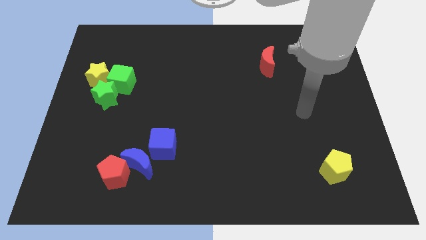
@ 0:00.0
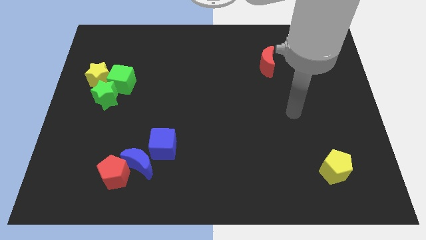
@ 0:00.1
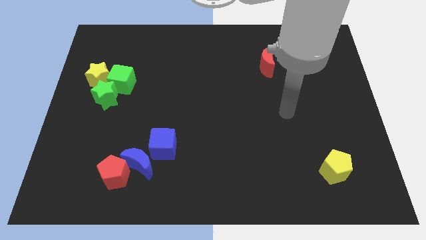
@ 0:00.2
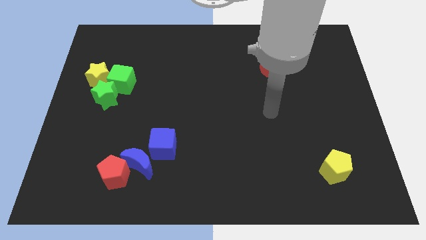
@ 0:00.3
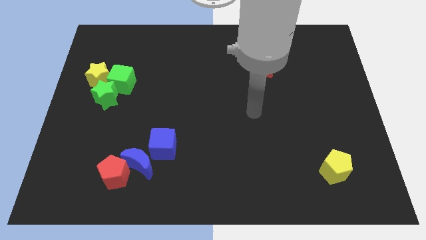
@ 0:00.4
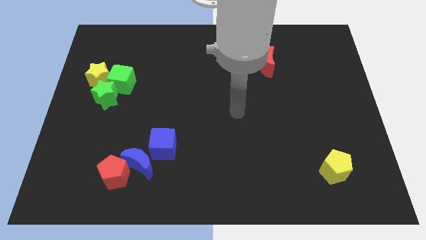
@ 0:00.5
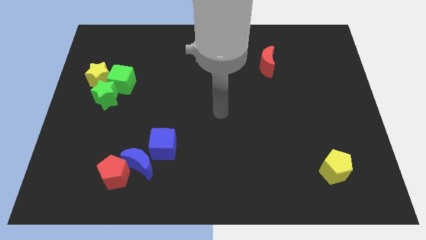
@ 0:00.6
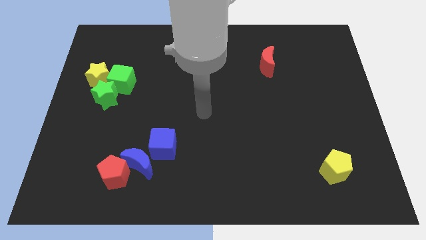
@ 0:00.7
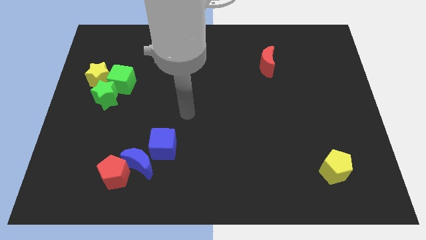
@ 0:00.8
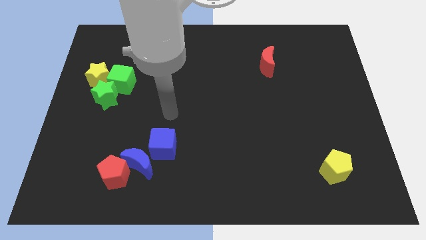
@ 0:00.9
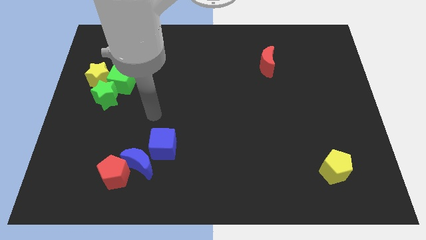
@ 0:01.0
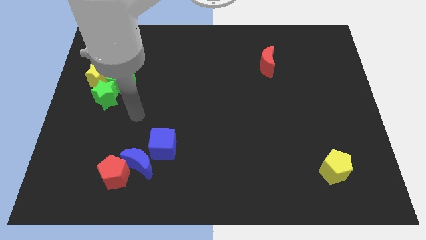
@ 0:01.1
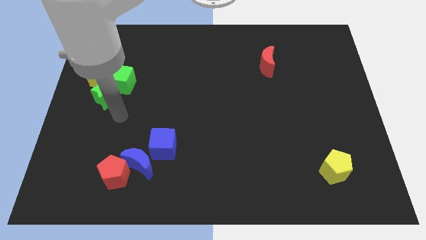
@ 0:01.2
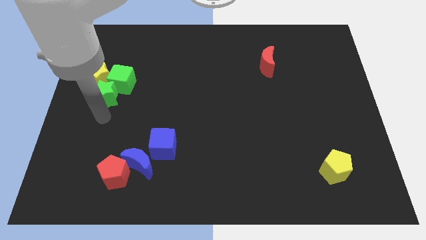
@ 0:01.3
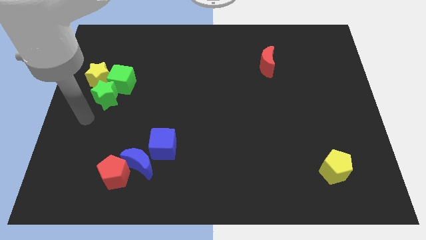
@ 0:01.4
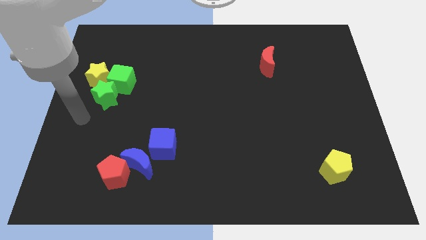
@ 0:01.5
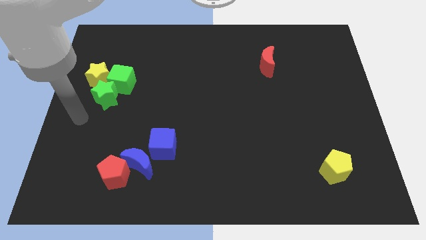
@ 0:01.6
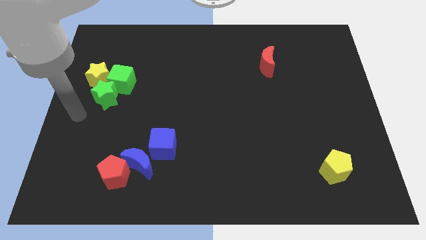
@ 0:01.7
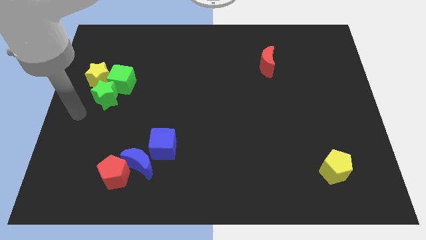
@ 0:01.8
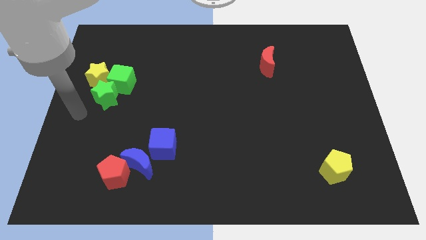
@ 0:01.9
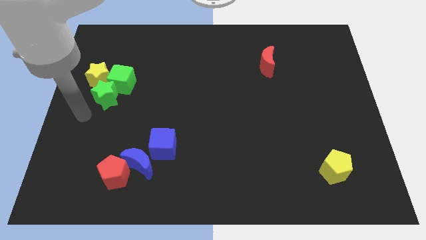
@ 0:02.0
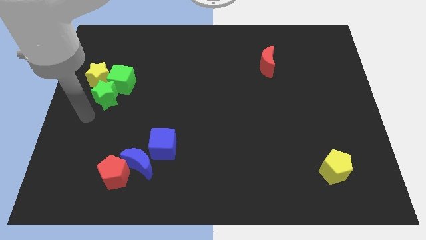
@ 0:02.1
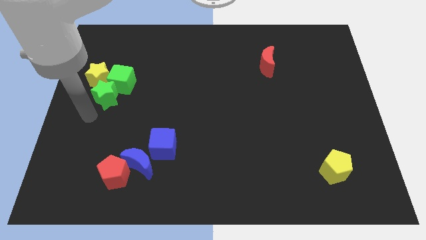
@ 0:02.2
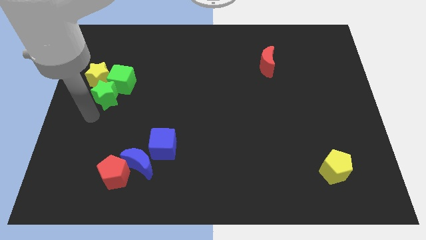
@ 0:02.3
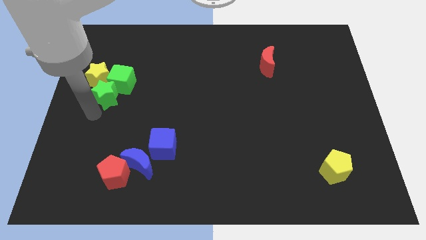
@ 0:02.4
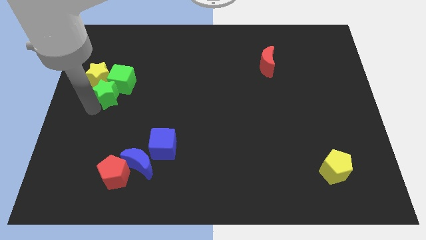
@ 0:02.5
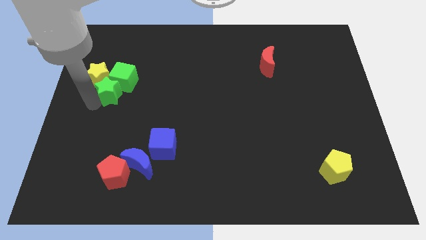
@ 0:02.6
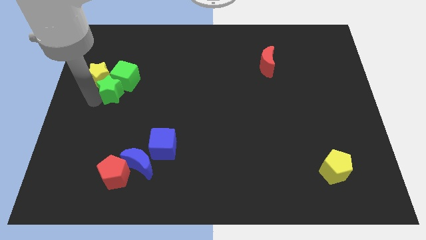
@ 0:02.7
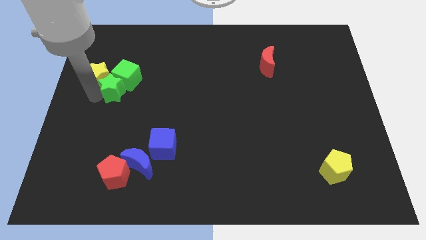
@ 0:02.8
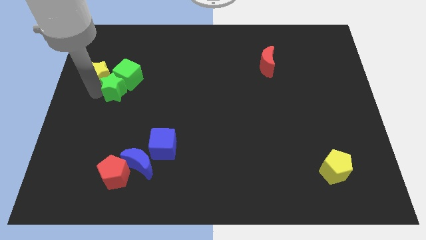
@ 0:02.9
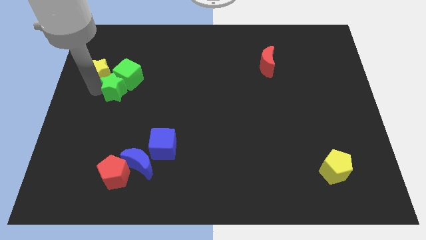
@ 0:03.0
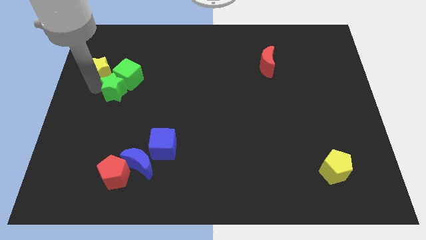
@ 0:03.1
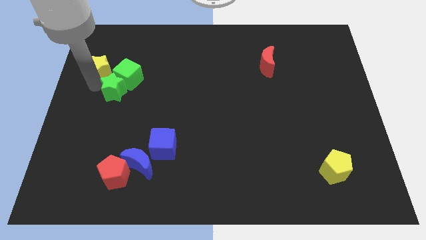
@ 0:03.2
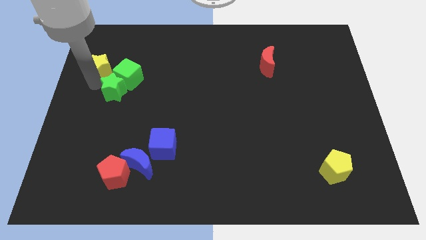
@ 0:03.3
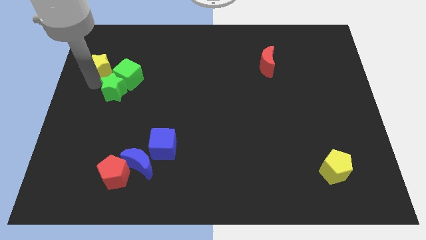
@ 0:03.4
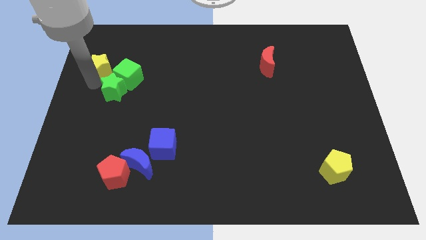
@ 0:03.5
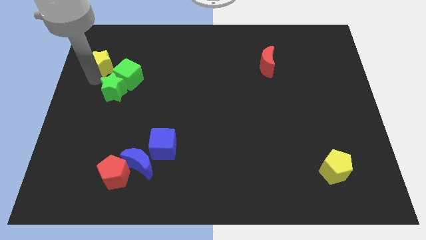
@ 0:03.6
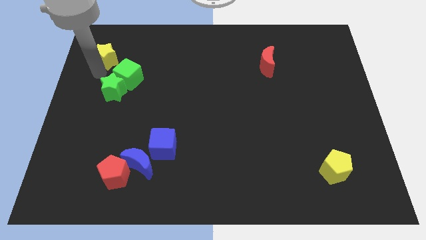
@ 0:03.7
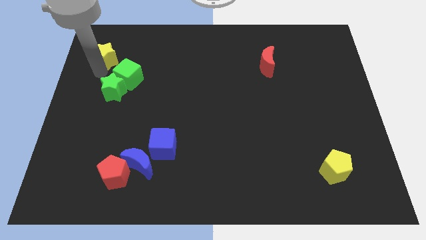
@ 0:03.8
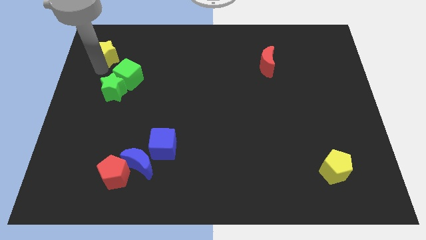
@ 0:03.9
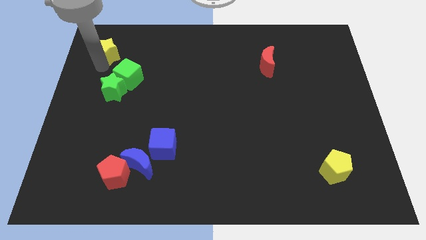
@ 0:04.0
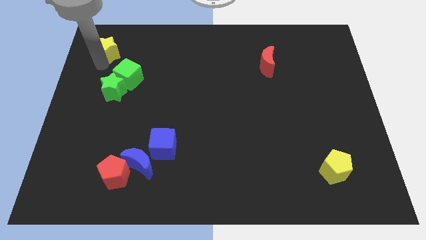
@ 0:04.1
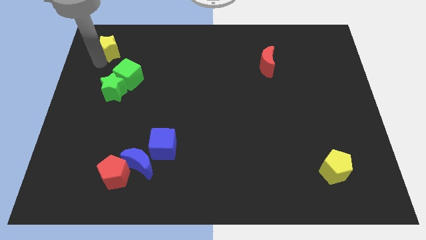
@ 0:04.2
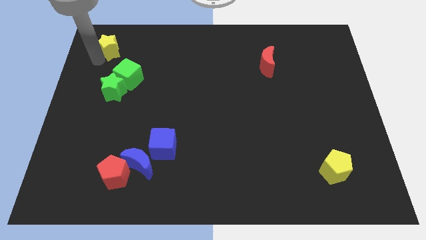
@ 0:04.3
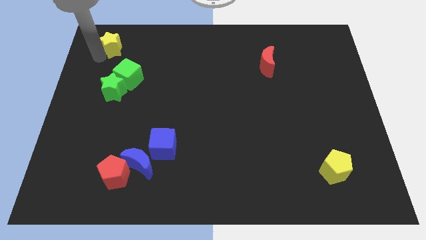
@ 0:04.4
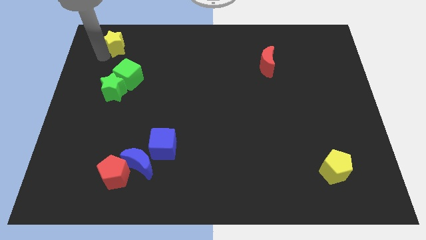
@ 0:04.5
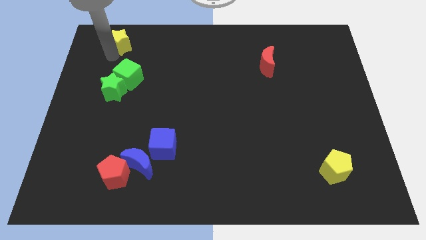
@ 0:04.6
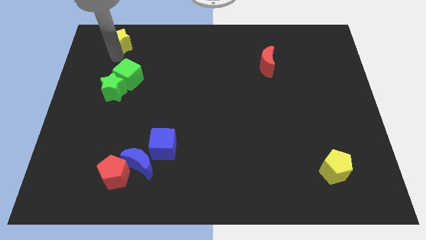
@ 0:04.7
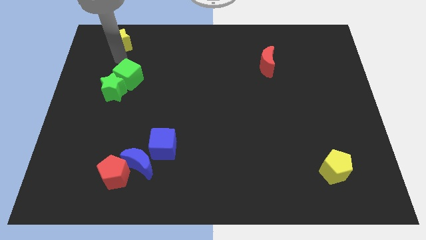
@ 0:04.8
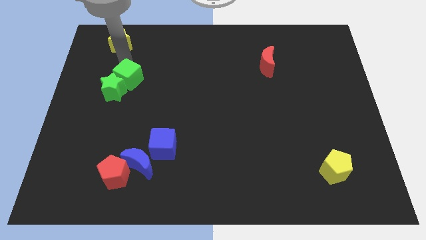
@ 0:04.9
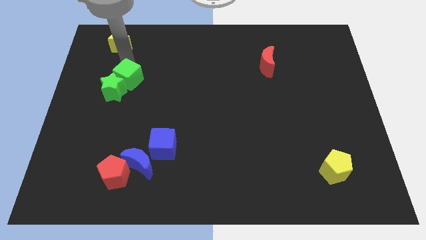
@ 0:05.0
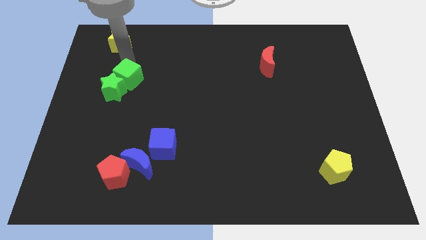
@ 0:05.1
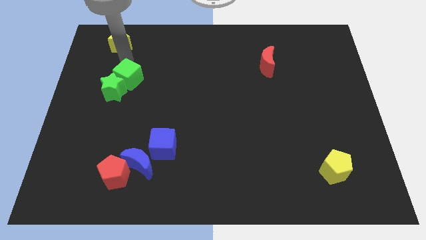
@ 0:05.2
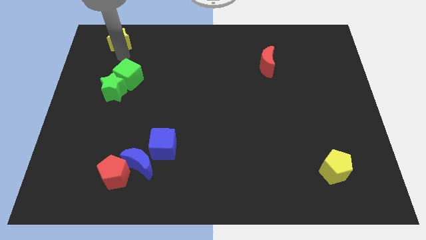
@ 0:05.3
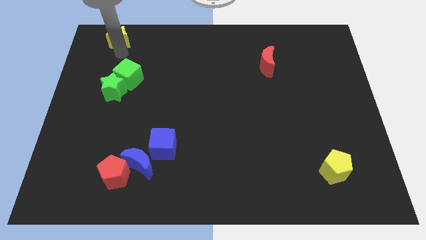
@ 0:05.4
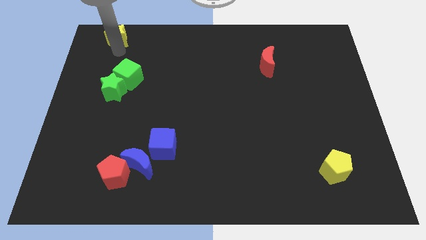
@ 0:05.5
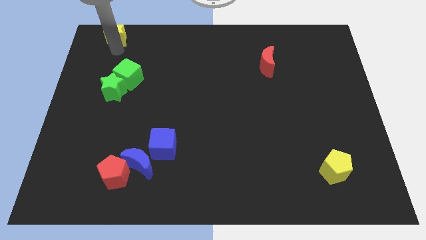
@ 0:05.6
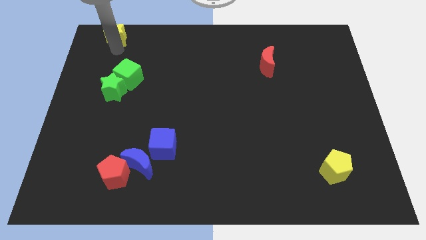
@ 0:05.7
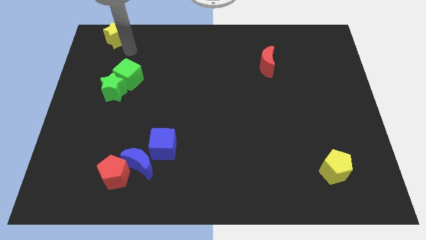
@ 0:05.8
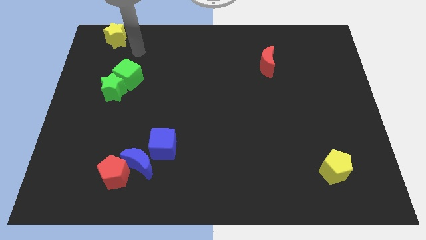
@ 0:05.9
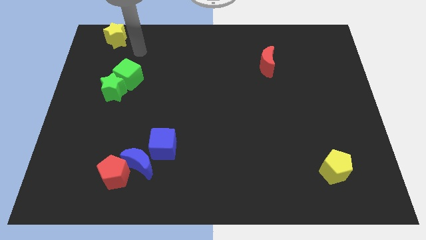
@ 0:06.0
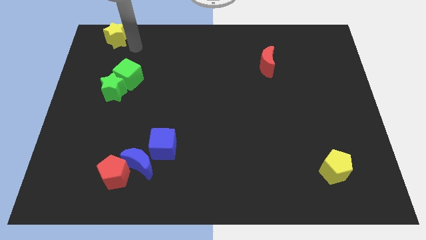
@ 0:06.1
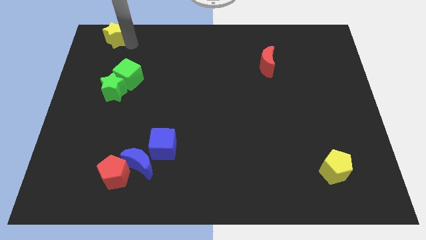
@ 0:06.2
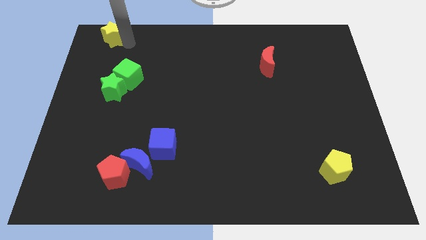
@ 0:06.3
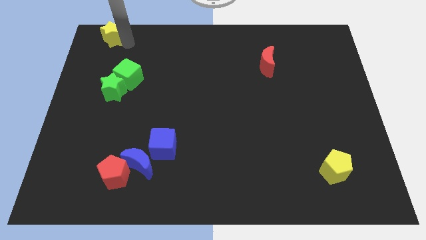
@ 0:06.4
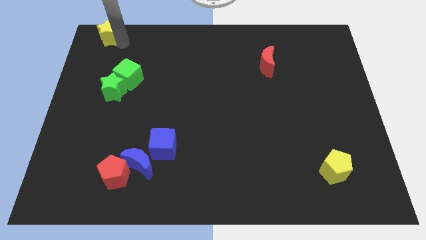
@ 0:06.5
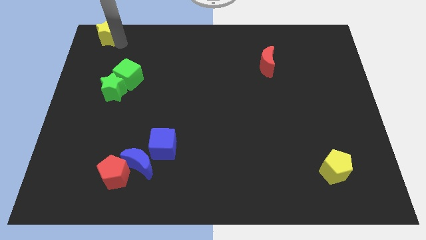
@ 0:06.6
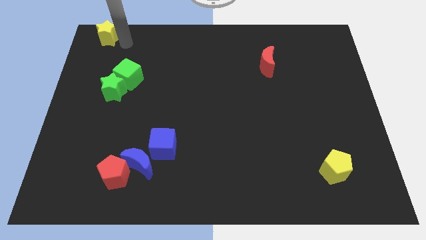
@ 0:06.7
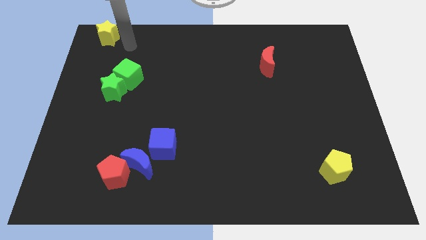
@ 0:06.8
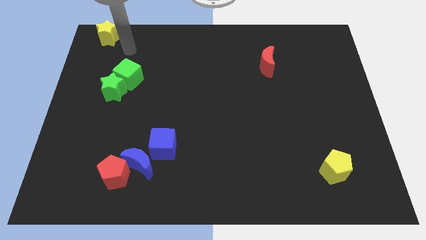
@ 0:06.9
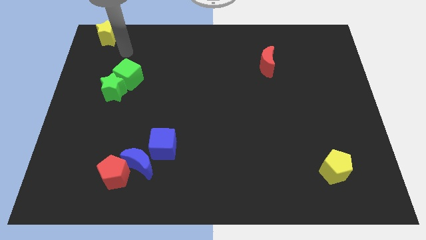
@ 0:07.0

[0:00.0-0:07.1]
push the yellow star to the top of green cube

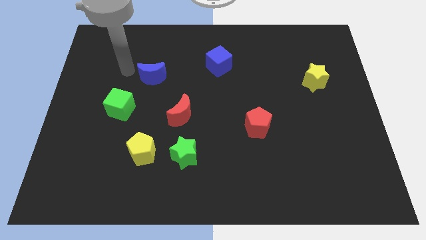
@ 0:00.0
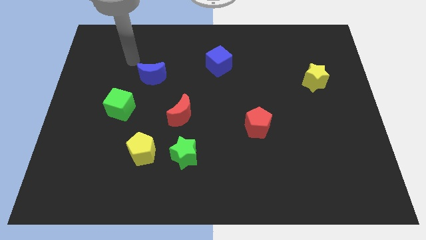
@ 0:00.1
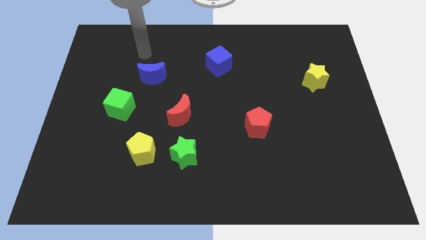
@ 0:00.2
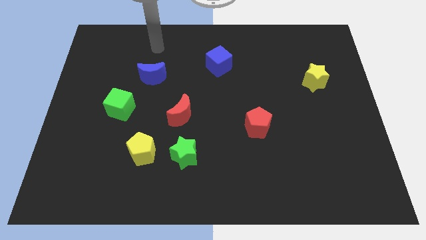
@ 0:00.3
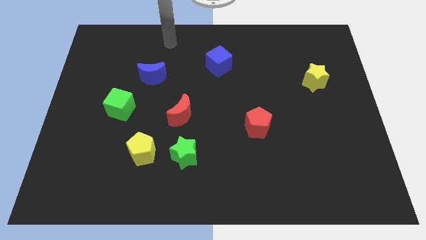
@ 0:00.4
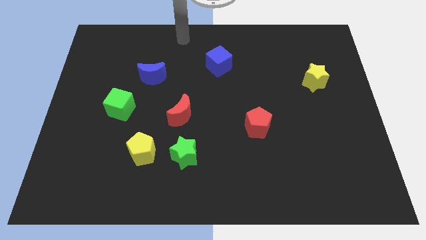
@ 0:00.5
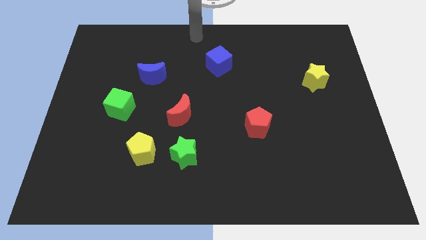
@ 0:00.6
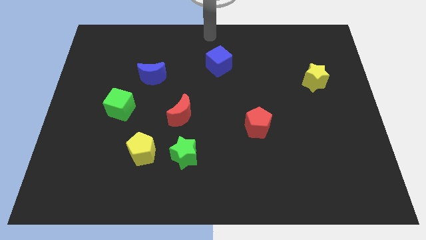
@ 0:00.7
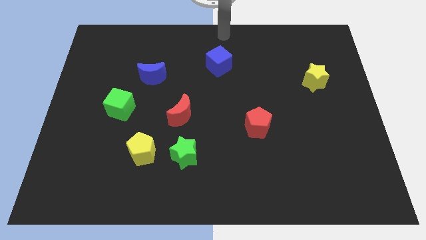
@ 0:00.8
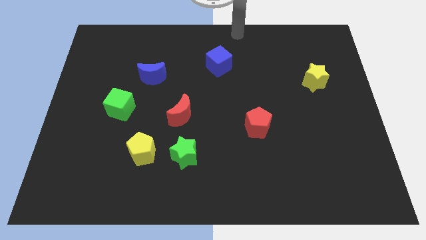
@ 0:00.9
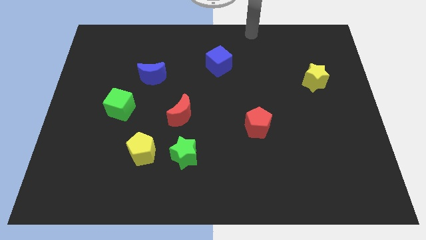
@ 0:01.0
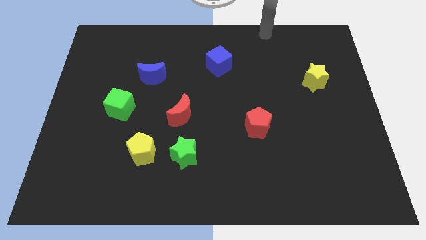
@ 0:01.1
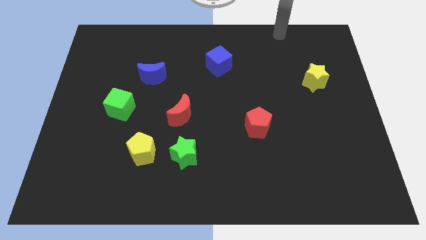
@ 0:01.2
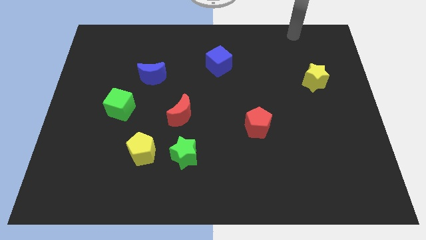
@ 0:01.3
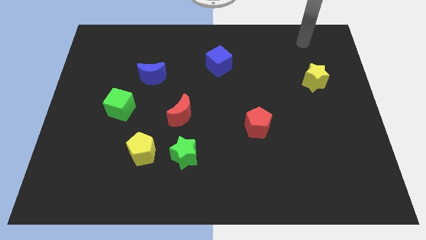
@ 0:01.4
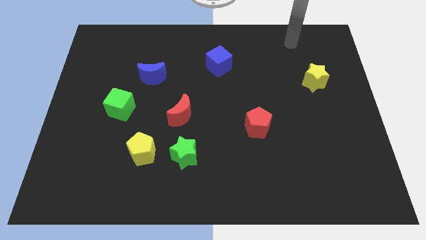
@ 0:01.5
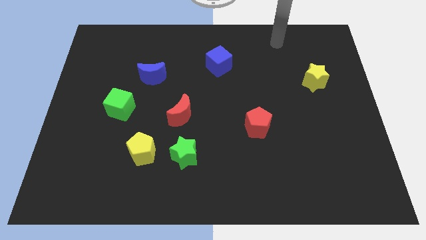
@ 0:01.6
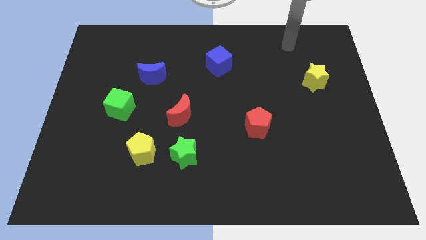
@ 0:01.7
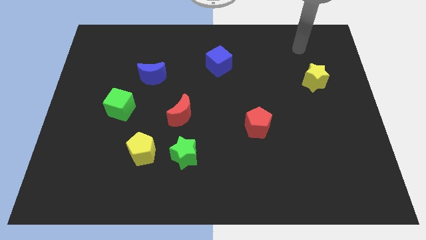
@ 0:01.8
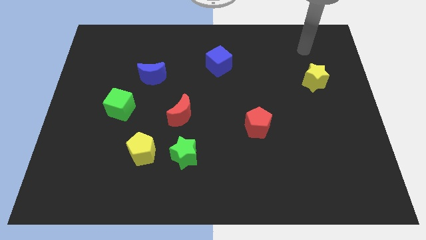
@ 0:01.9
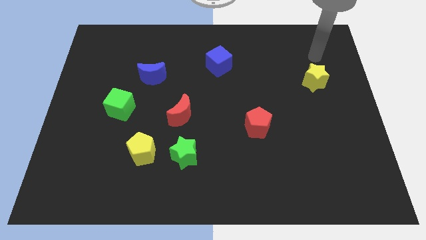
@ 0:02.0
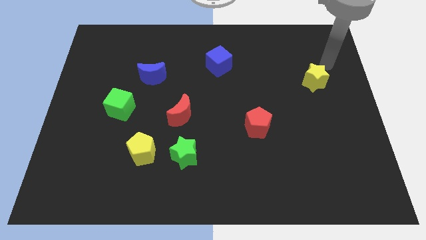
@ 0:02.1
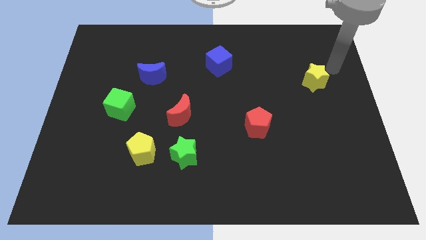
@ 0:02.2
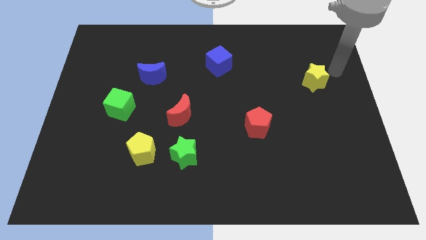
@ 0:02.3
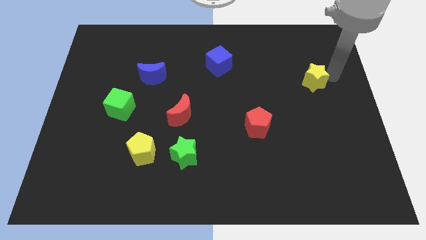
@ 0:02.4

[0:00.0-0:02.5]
point the arm to the right of the yellow star
